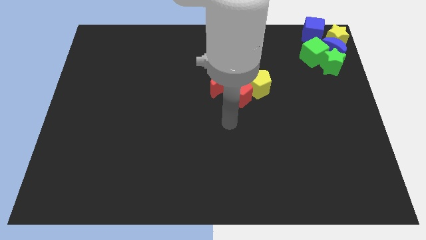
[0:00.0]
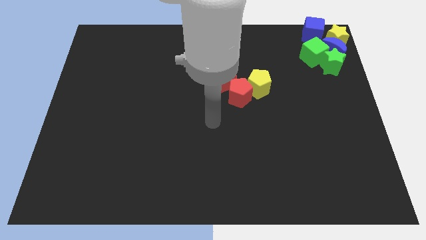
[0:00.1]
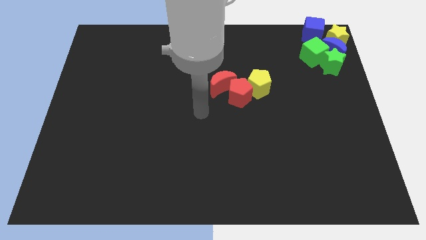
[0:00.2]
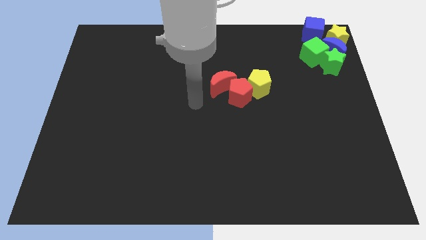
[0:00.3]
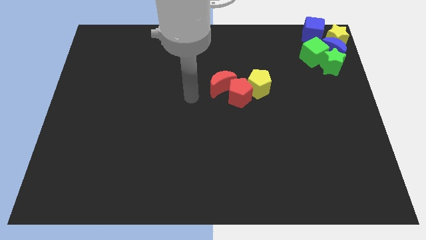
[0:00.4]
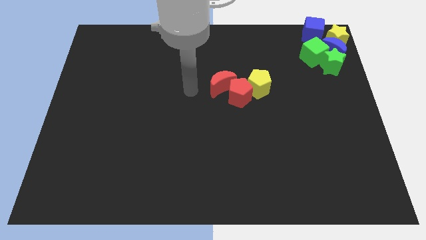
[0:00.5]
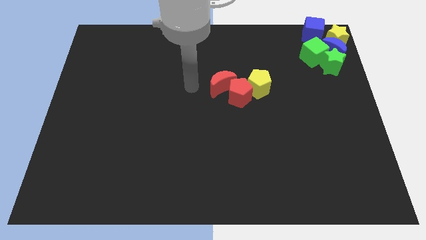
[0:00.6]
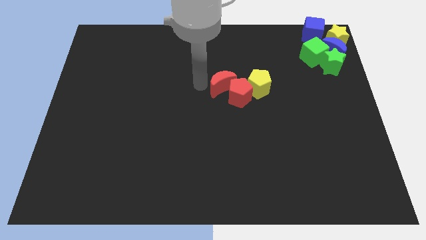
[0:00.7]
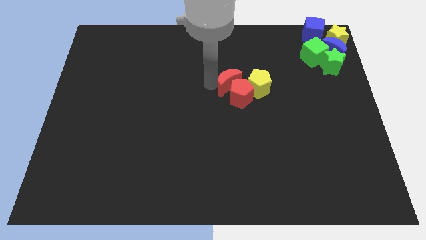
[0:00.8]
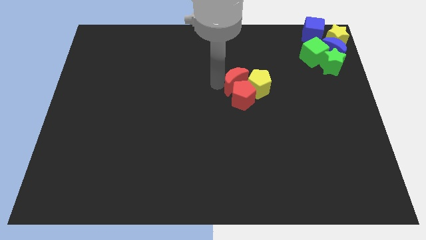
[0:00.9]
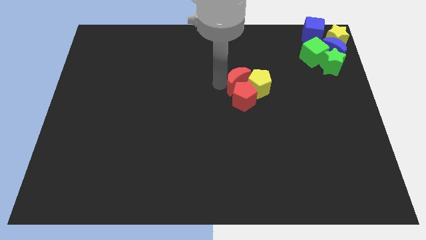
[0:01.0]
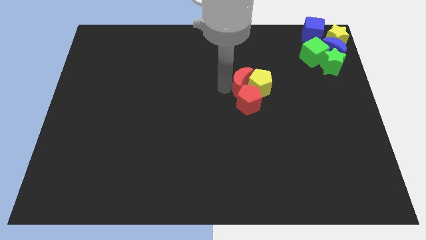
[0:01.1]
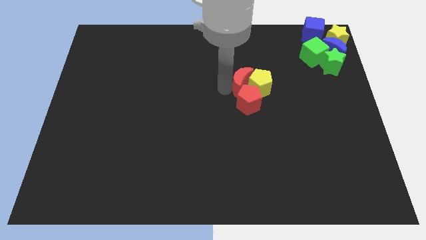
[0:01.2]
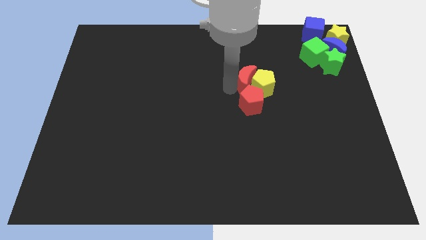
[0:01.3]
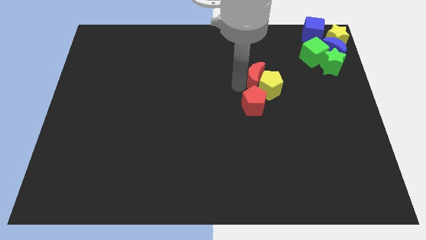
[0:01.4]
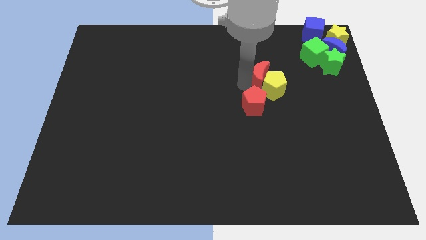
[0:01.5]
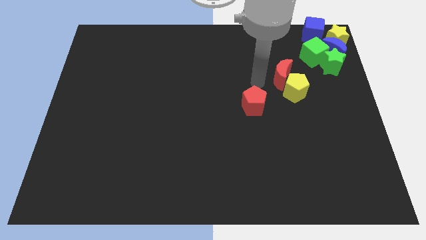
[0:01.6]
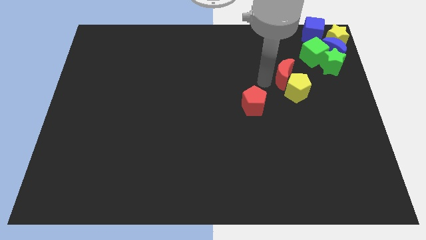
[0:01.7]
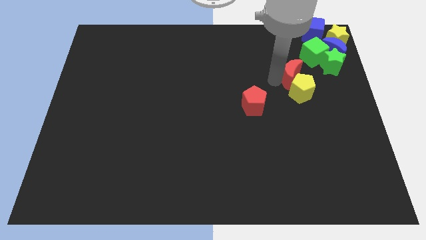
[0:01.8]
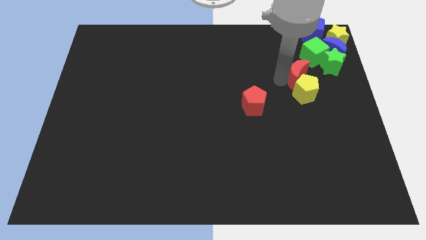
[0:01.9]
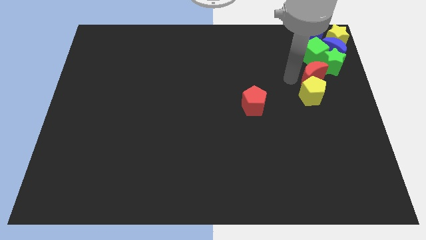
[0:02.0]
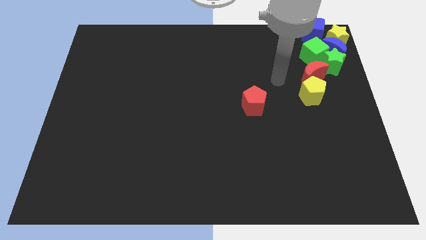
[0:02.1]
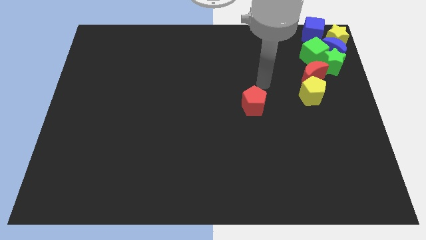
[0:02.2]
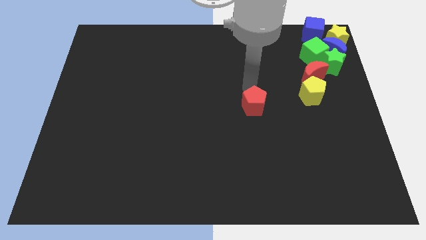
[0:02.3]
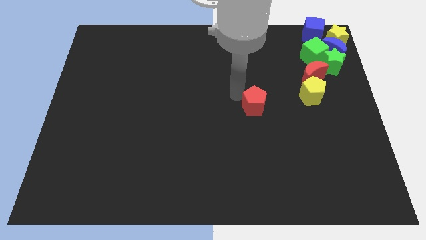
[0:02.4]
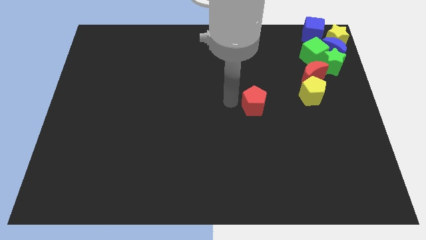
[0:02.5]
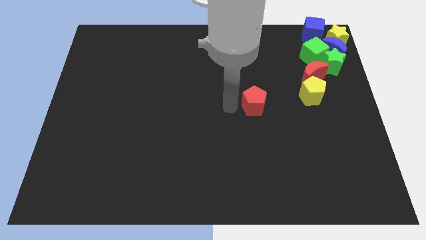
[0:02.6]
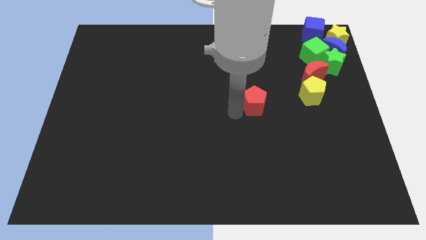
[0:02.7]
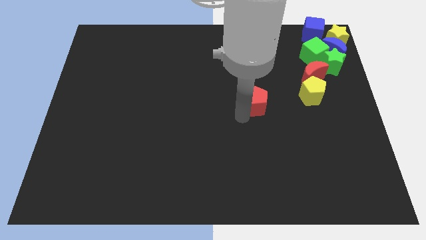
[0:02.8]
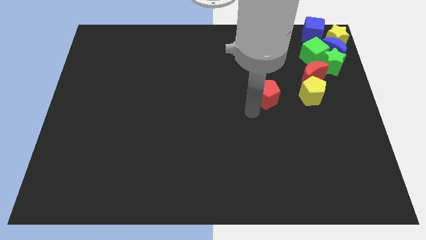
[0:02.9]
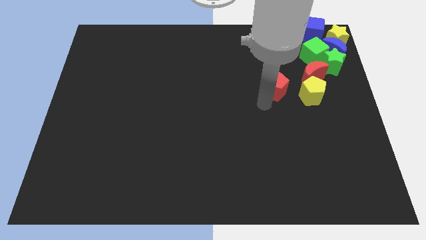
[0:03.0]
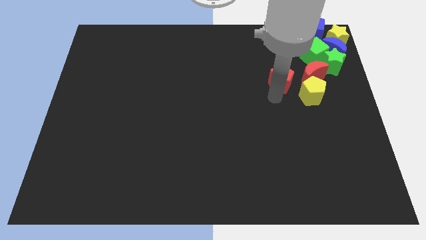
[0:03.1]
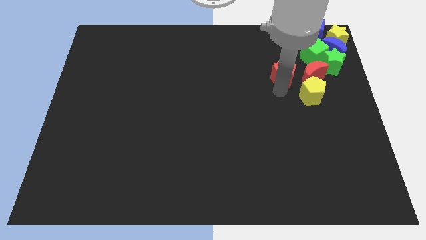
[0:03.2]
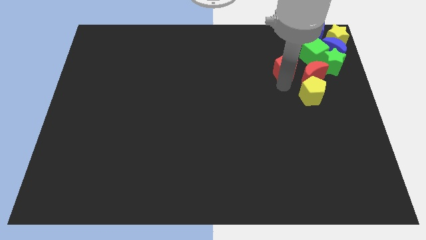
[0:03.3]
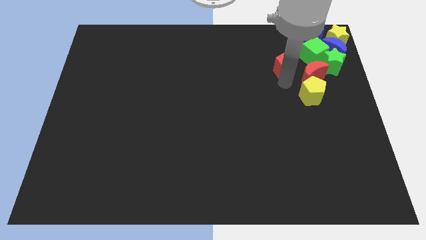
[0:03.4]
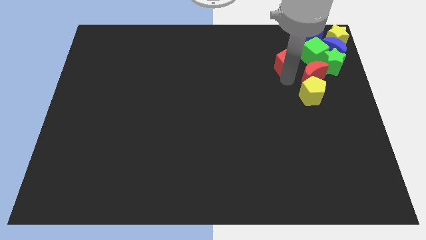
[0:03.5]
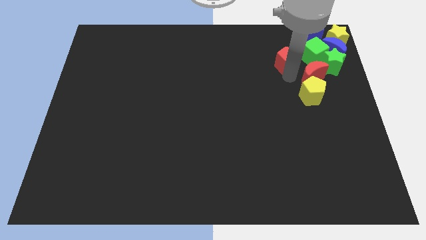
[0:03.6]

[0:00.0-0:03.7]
push the red blocks and yellow pentagon into the group of blocks

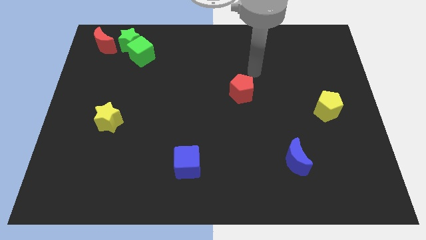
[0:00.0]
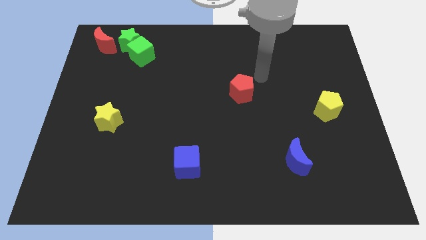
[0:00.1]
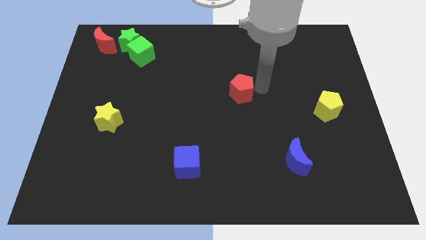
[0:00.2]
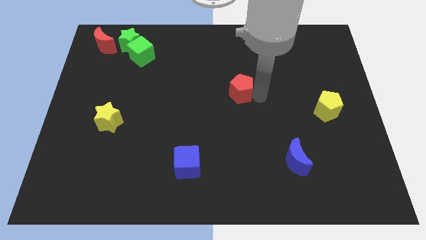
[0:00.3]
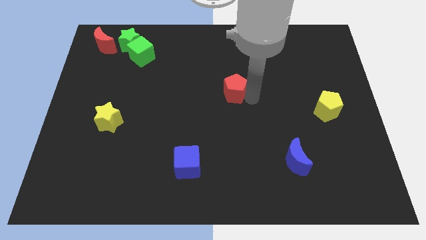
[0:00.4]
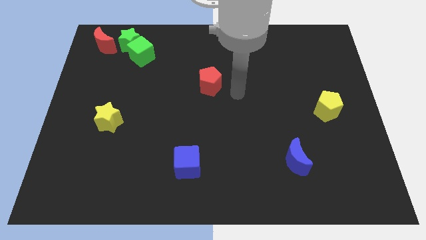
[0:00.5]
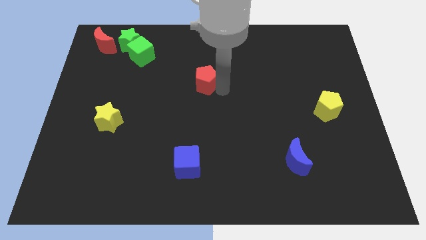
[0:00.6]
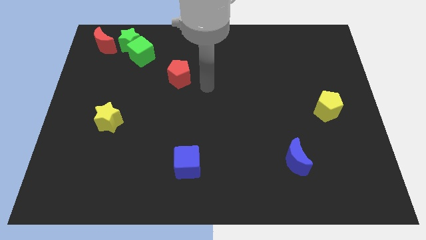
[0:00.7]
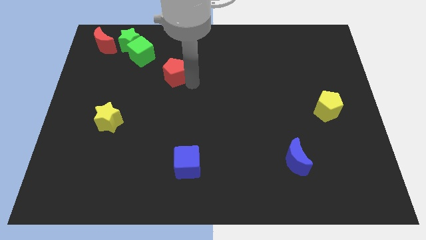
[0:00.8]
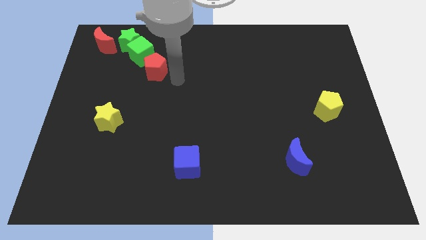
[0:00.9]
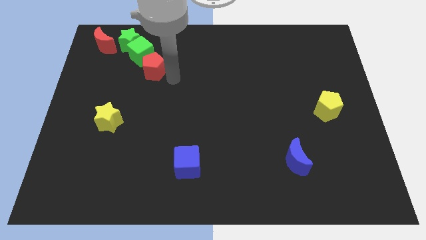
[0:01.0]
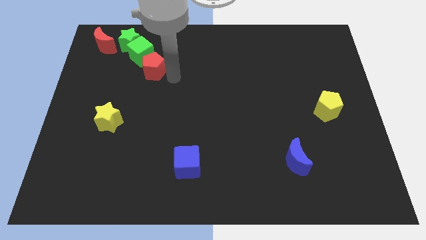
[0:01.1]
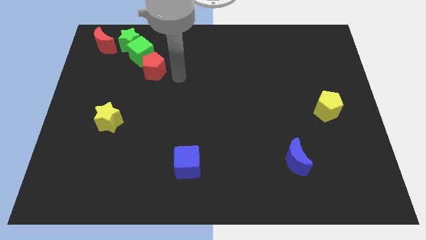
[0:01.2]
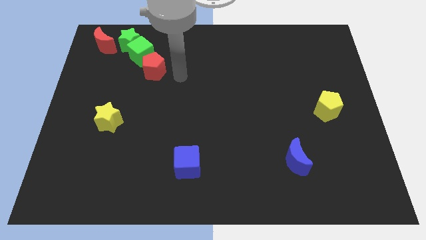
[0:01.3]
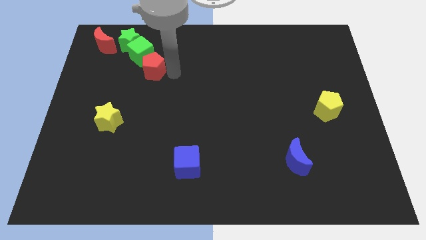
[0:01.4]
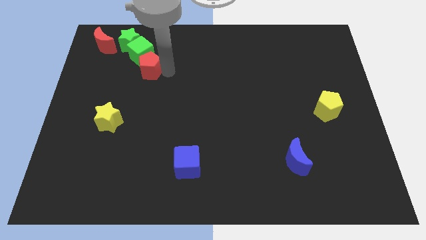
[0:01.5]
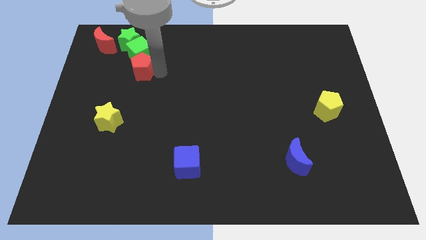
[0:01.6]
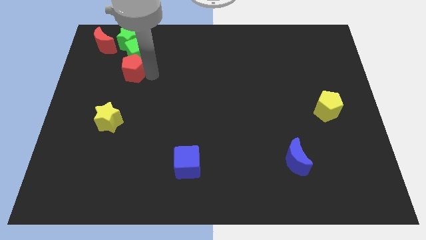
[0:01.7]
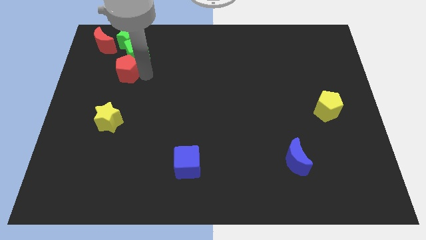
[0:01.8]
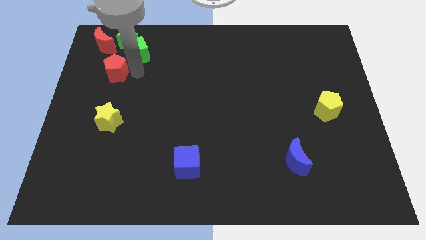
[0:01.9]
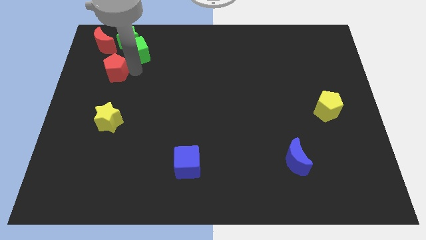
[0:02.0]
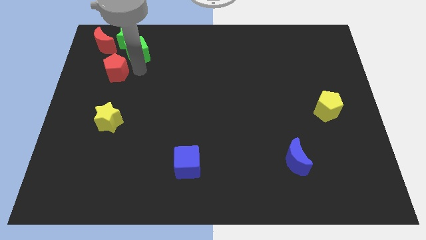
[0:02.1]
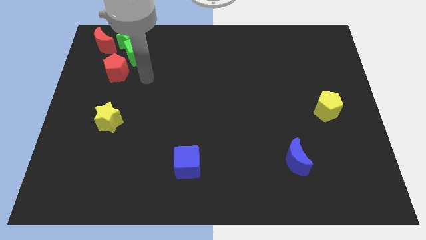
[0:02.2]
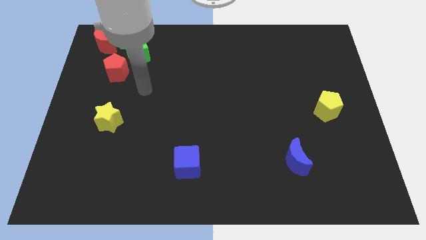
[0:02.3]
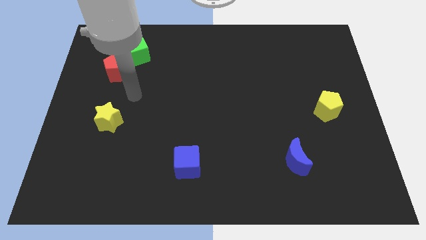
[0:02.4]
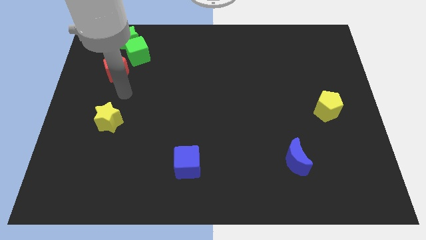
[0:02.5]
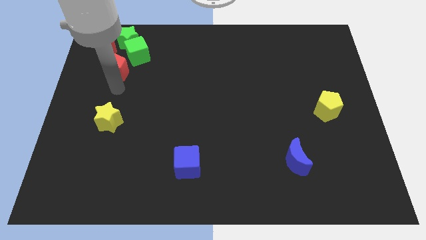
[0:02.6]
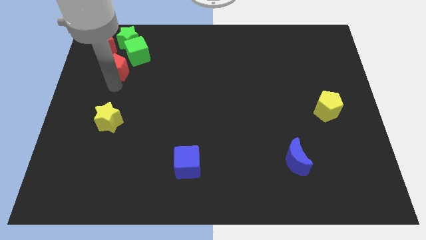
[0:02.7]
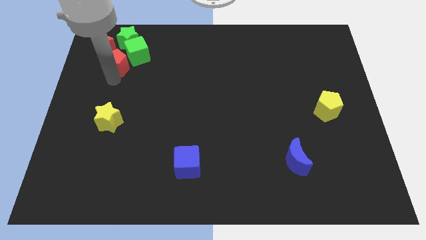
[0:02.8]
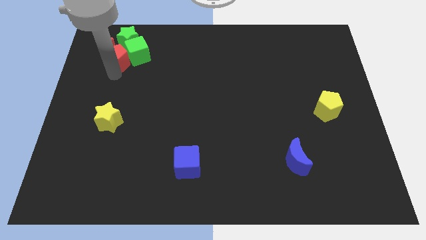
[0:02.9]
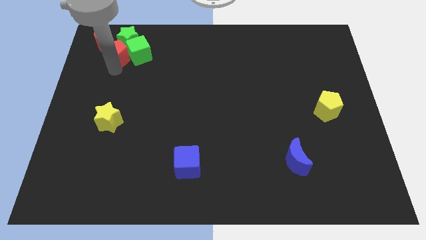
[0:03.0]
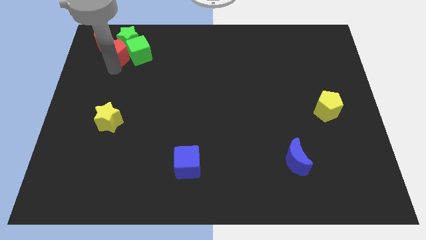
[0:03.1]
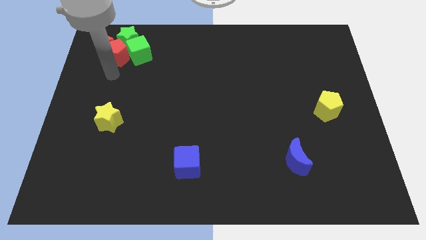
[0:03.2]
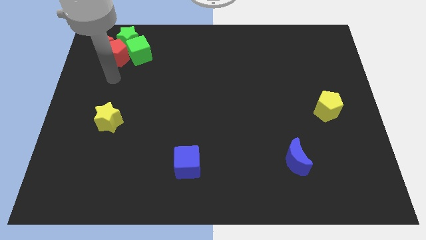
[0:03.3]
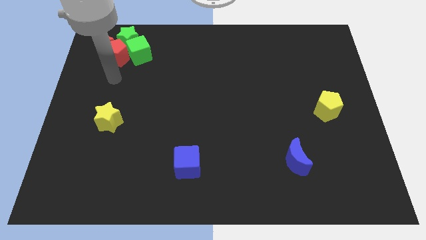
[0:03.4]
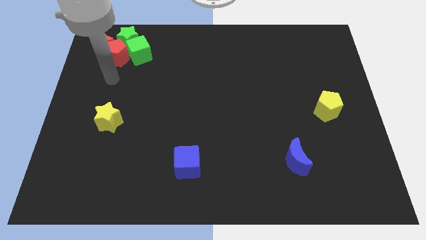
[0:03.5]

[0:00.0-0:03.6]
move the red pentagon into the bottom side of the red crescent

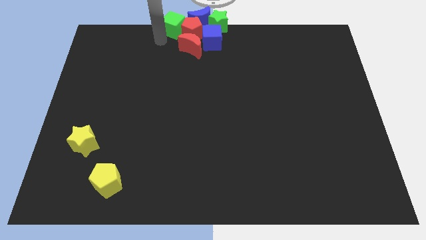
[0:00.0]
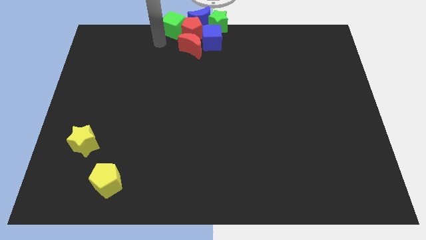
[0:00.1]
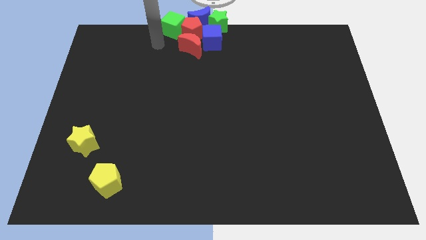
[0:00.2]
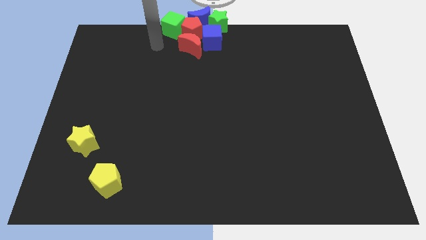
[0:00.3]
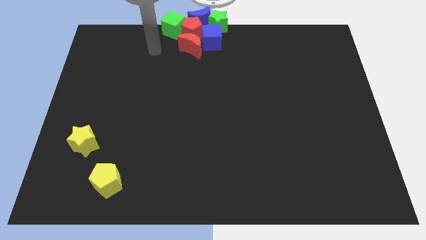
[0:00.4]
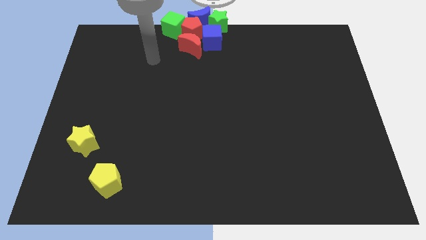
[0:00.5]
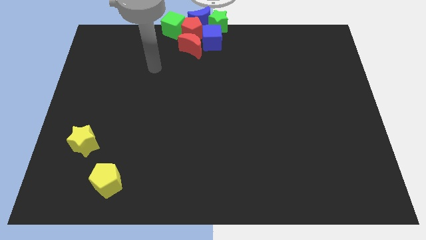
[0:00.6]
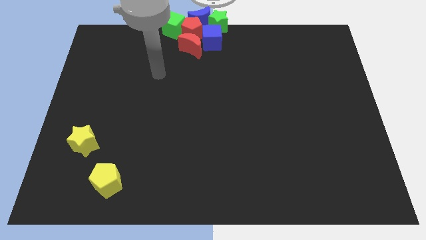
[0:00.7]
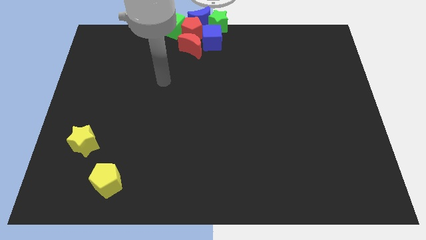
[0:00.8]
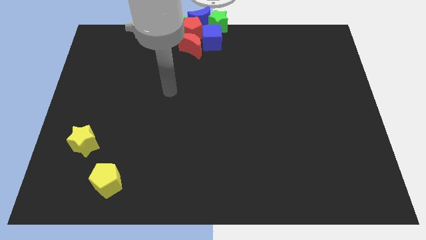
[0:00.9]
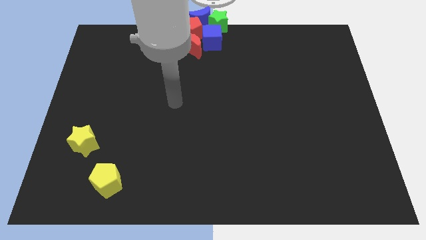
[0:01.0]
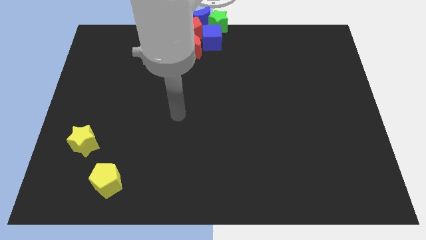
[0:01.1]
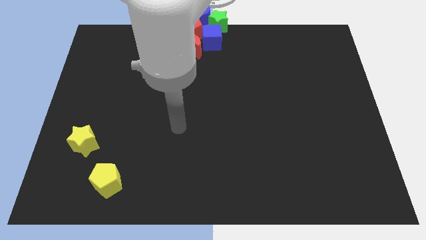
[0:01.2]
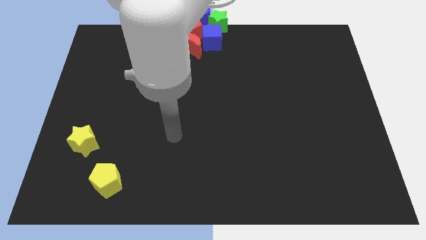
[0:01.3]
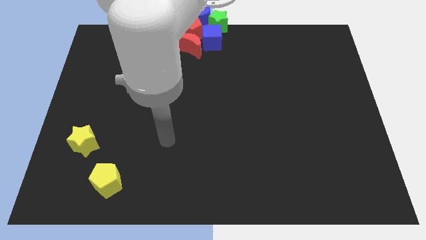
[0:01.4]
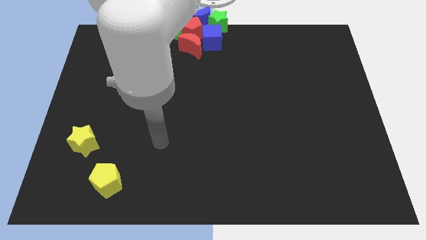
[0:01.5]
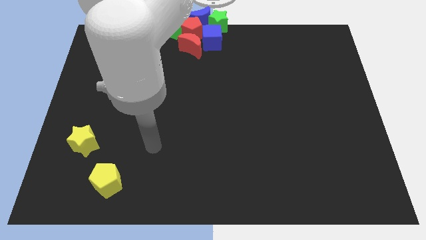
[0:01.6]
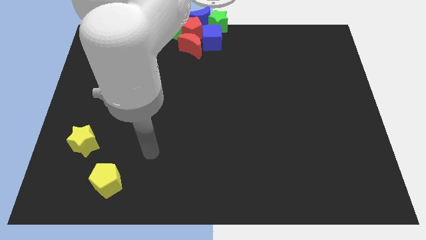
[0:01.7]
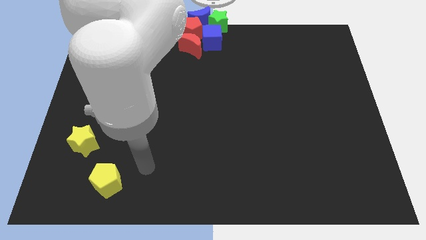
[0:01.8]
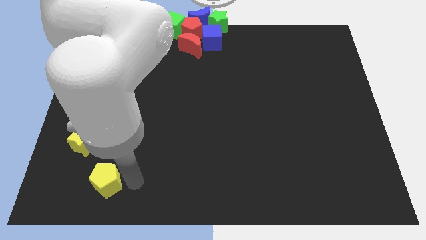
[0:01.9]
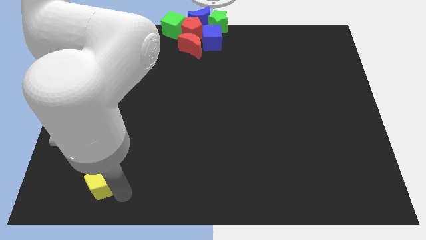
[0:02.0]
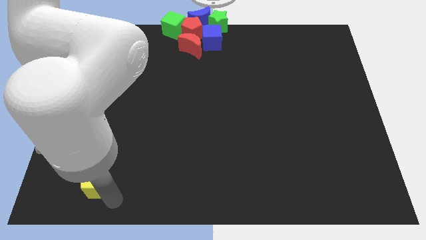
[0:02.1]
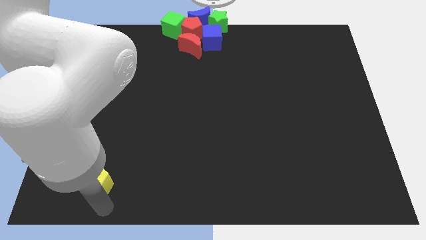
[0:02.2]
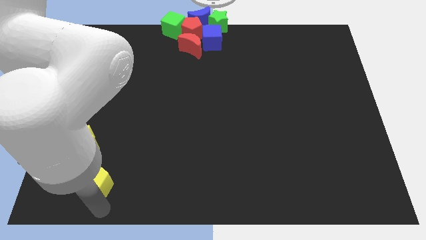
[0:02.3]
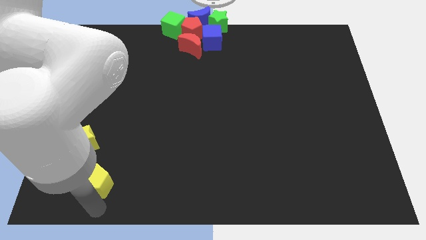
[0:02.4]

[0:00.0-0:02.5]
move the arm away from the green cube
